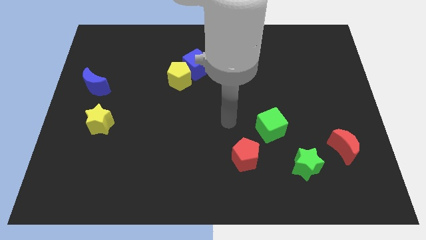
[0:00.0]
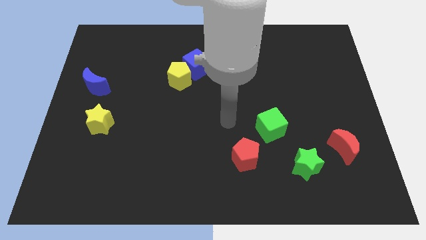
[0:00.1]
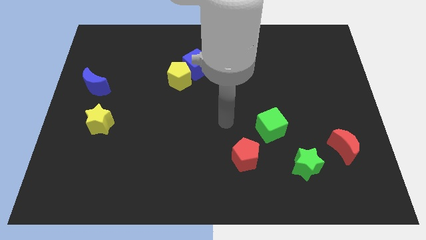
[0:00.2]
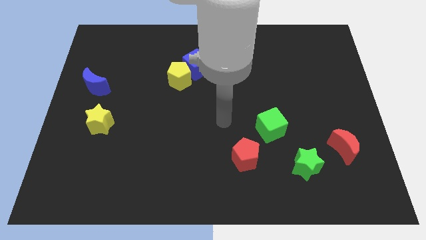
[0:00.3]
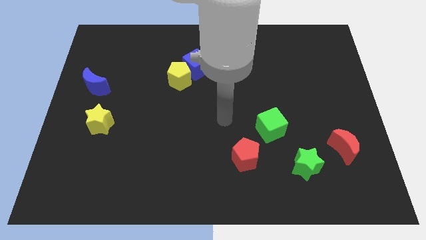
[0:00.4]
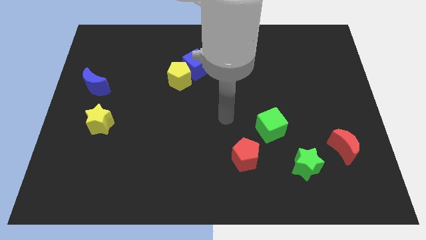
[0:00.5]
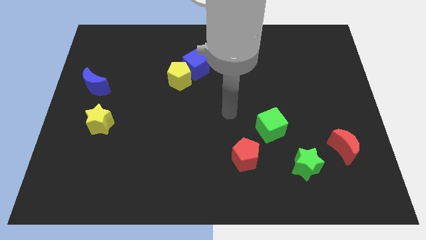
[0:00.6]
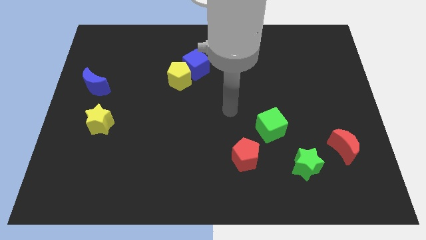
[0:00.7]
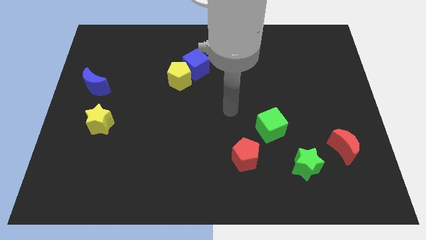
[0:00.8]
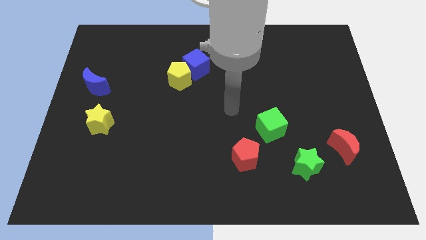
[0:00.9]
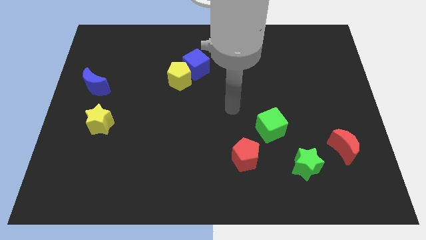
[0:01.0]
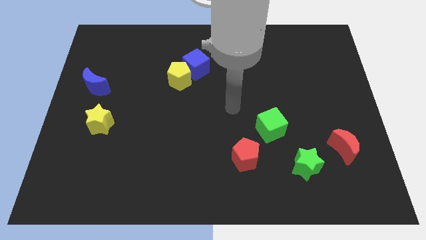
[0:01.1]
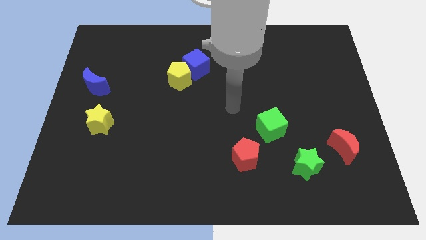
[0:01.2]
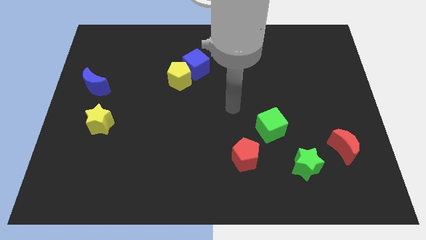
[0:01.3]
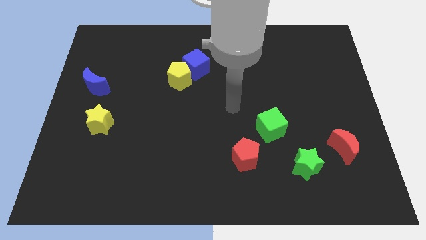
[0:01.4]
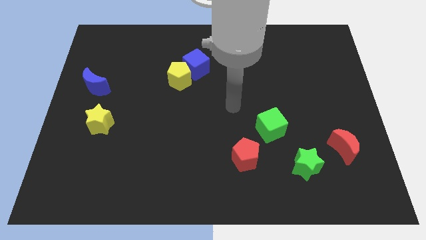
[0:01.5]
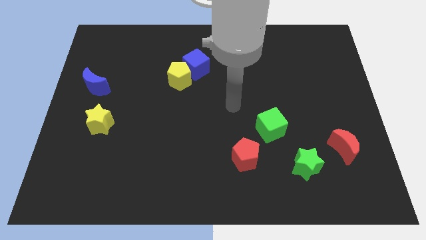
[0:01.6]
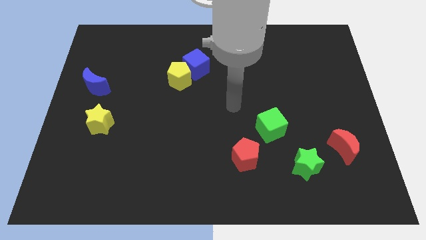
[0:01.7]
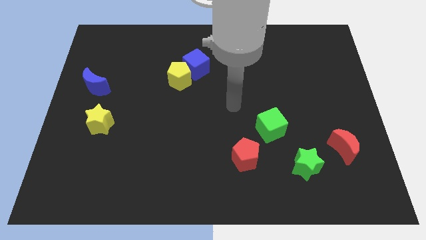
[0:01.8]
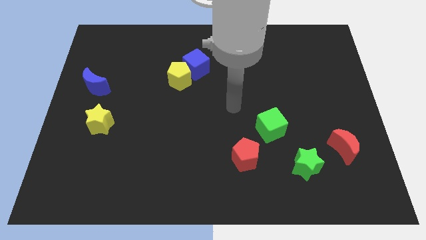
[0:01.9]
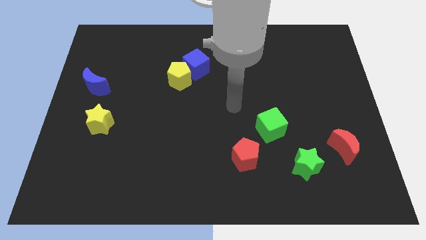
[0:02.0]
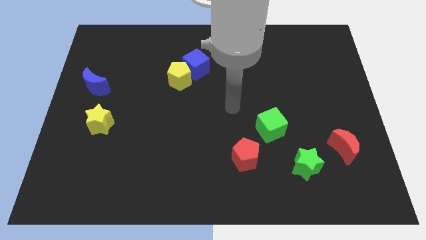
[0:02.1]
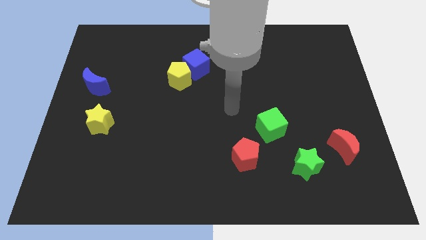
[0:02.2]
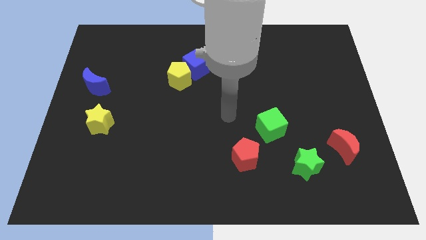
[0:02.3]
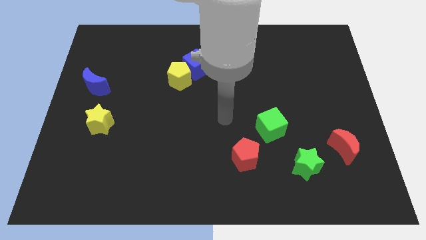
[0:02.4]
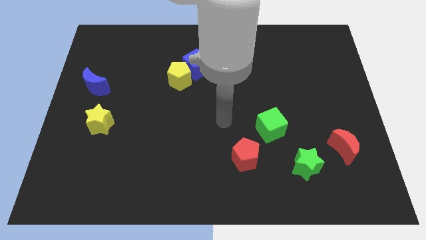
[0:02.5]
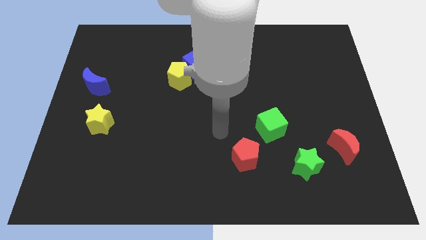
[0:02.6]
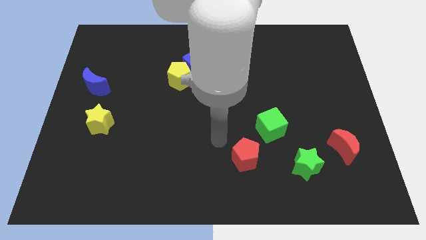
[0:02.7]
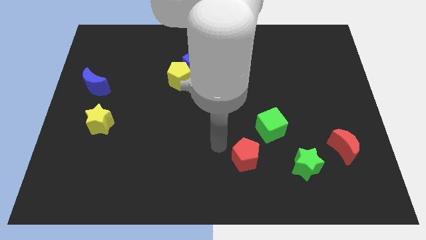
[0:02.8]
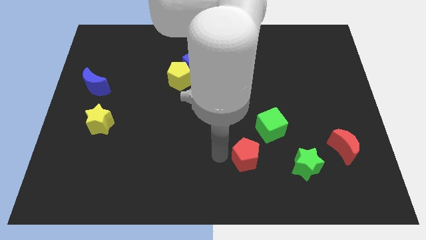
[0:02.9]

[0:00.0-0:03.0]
point your arm to the left side of red pentagon

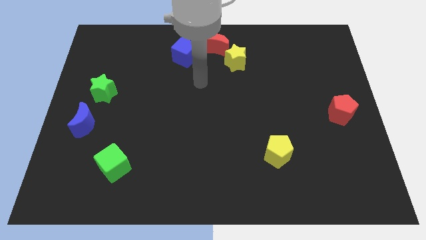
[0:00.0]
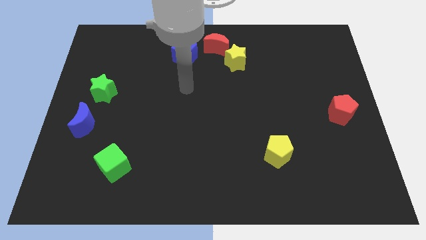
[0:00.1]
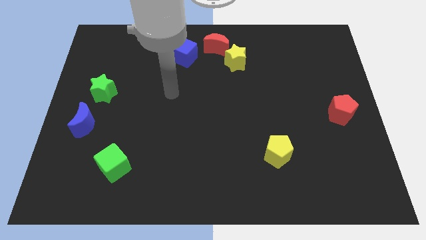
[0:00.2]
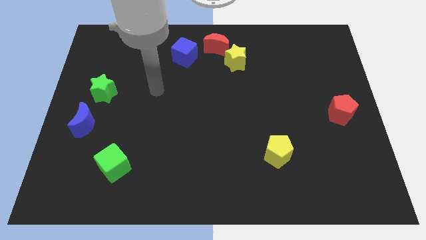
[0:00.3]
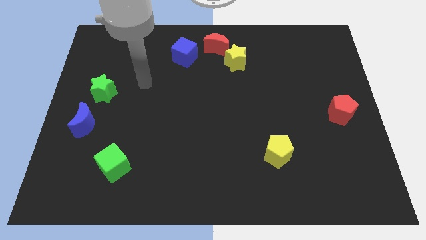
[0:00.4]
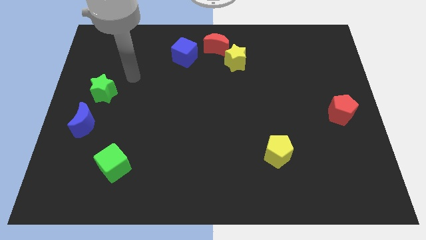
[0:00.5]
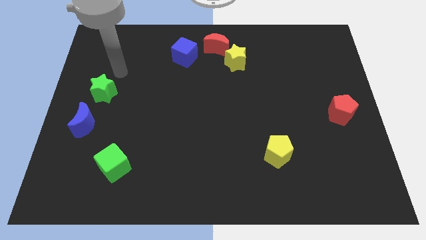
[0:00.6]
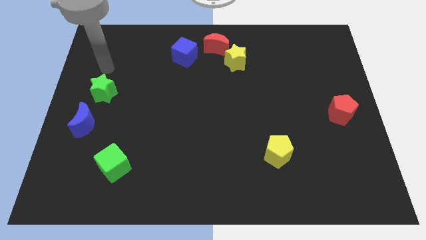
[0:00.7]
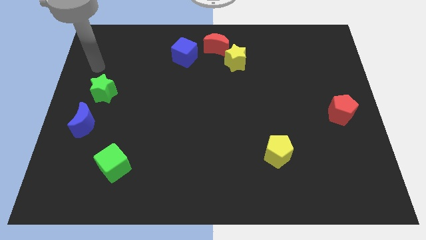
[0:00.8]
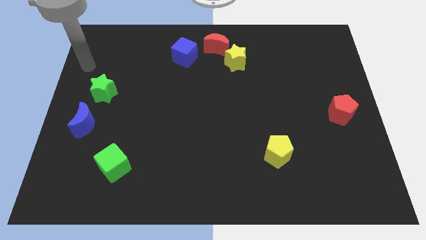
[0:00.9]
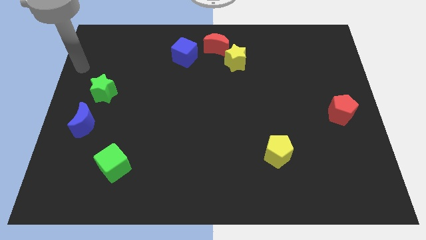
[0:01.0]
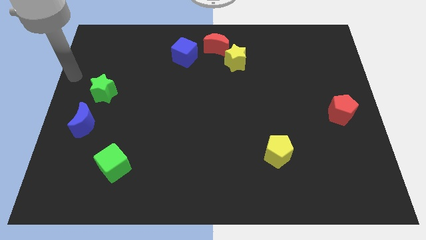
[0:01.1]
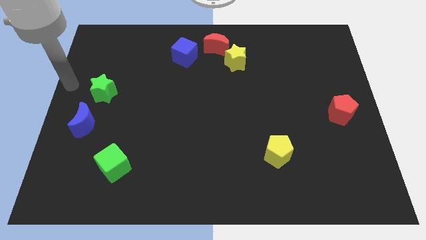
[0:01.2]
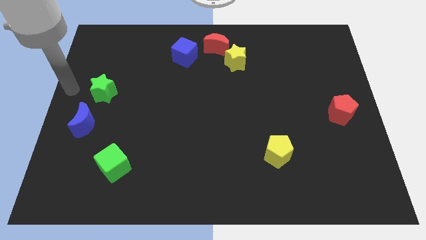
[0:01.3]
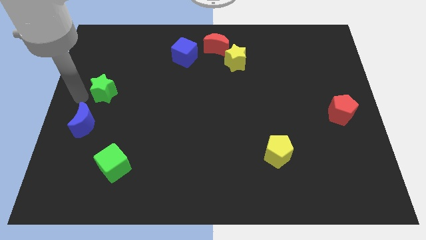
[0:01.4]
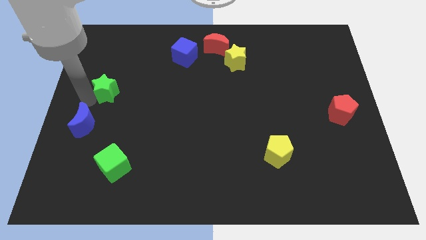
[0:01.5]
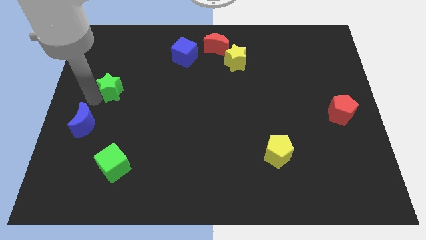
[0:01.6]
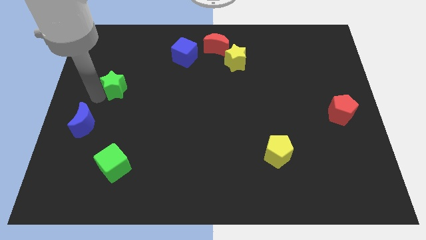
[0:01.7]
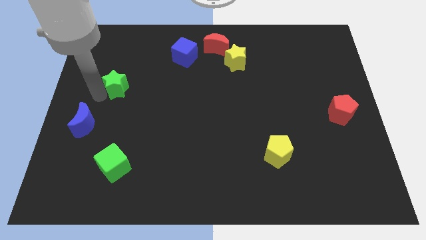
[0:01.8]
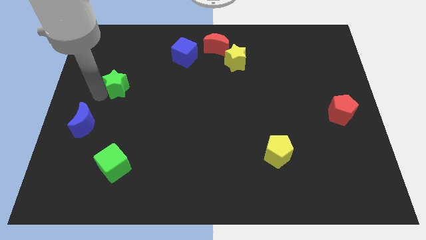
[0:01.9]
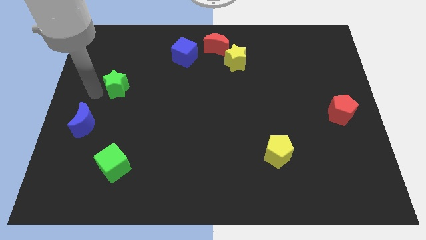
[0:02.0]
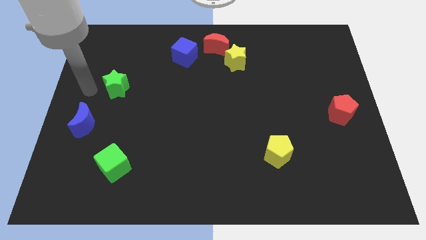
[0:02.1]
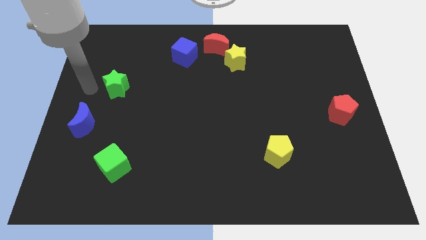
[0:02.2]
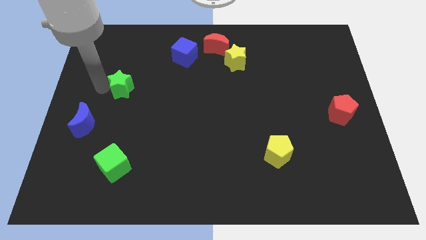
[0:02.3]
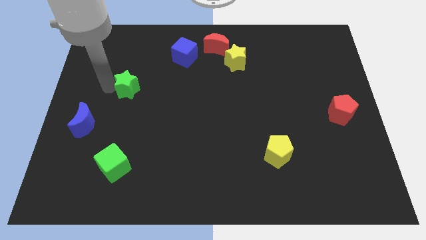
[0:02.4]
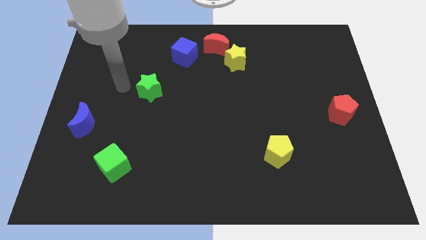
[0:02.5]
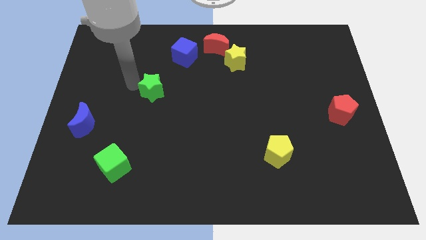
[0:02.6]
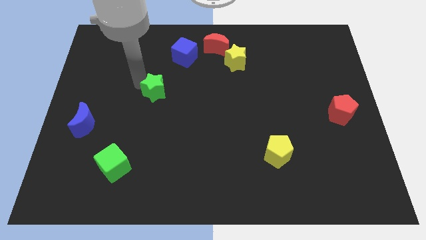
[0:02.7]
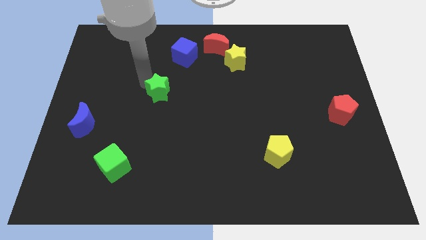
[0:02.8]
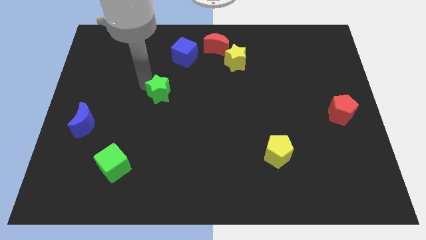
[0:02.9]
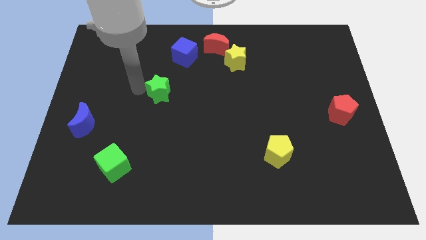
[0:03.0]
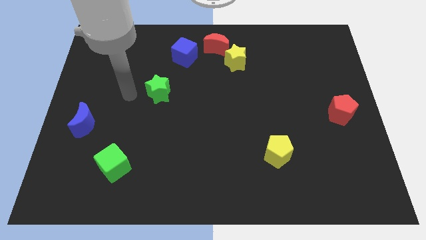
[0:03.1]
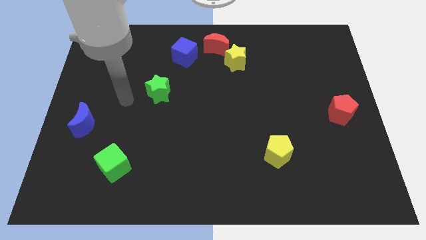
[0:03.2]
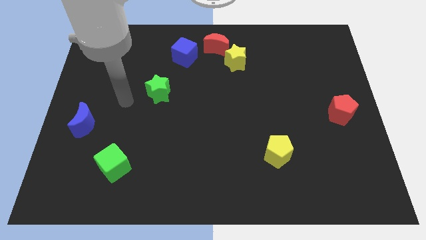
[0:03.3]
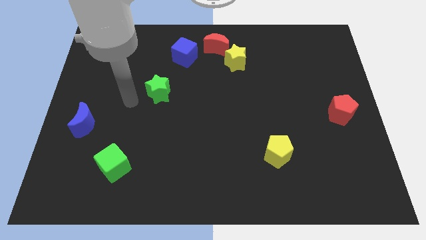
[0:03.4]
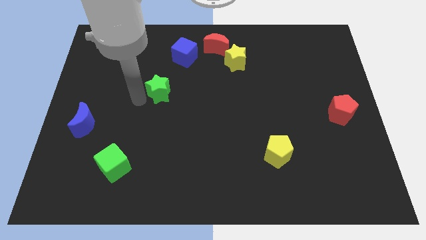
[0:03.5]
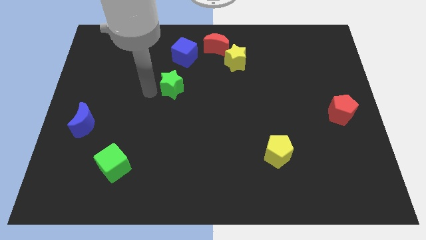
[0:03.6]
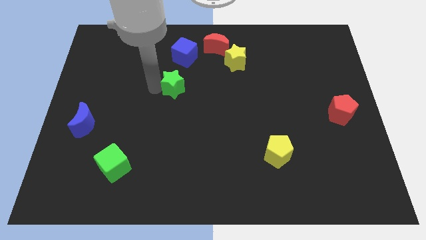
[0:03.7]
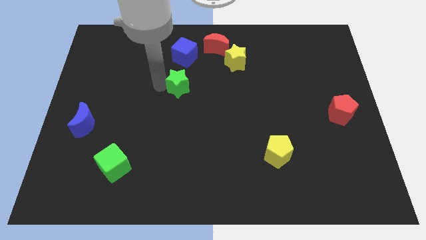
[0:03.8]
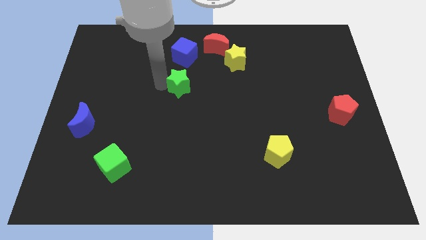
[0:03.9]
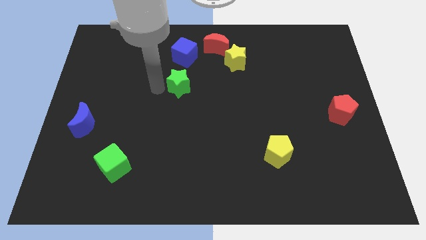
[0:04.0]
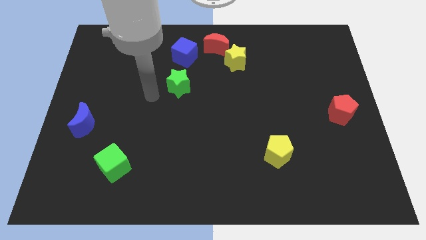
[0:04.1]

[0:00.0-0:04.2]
slightly push the green star towards the right of the board

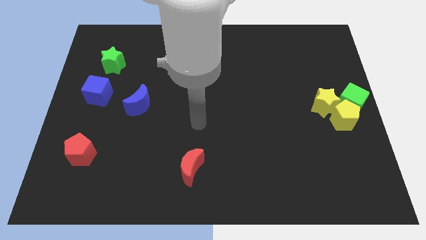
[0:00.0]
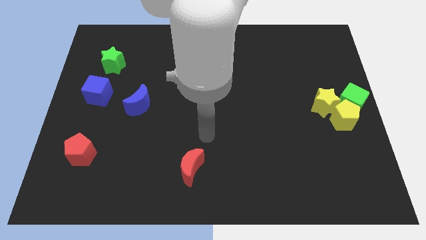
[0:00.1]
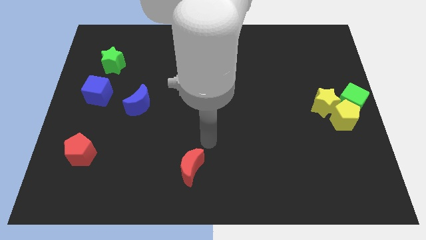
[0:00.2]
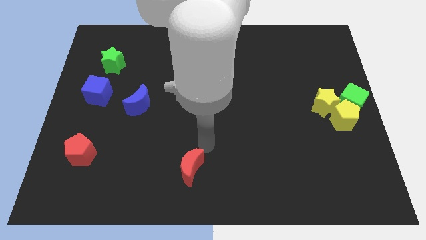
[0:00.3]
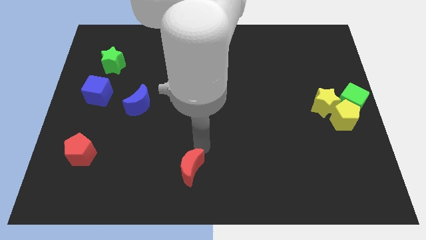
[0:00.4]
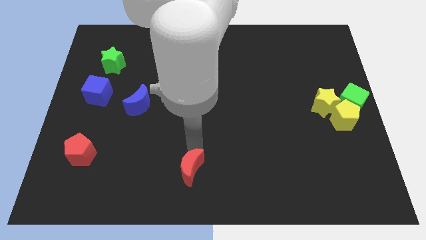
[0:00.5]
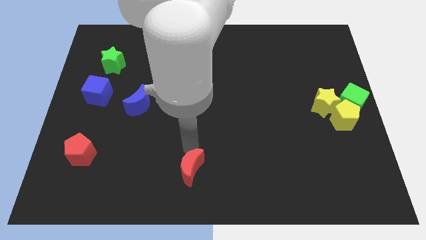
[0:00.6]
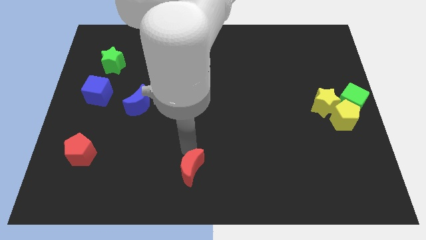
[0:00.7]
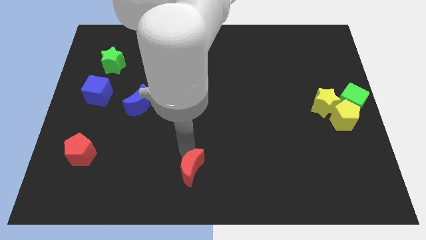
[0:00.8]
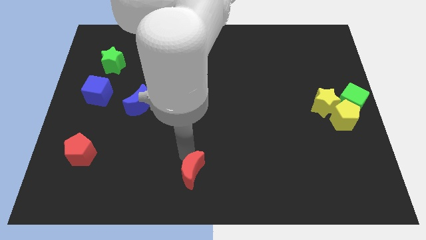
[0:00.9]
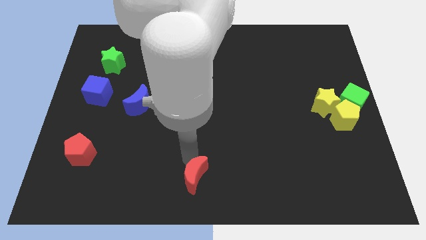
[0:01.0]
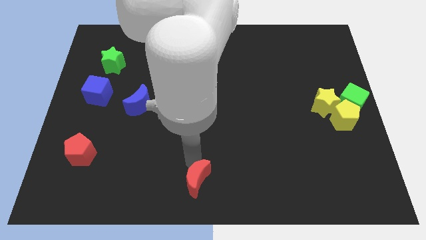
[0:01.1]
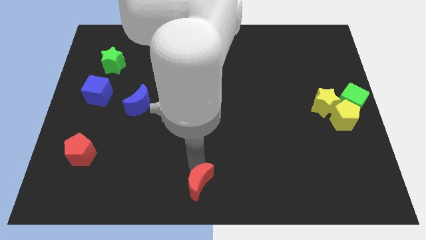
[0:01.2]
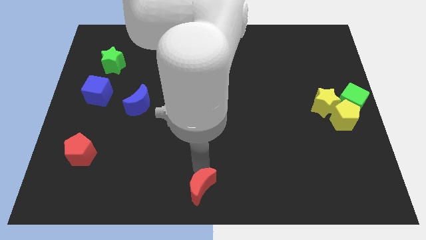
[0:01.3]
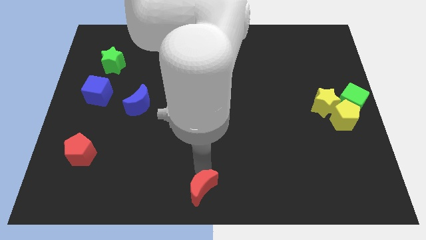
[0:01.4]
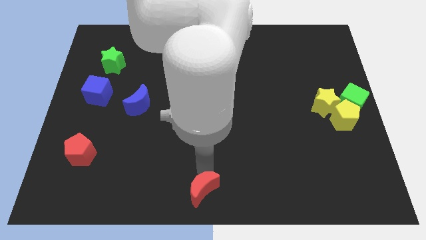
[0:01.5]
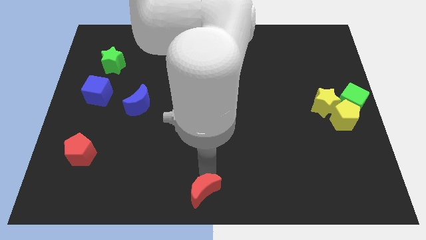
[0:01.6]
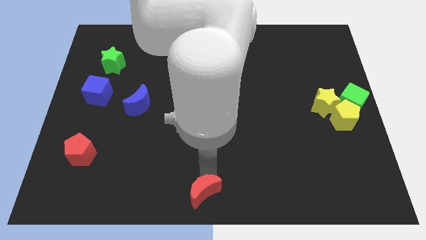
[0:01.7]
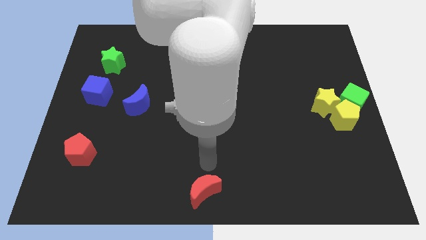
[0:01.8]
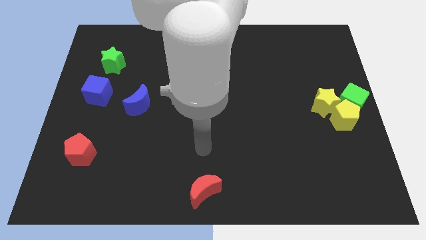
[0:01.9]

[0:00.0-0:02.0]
move the red crescent slightly to the bottom center of the board
